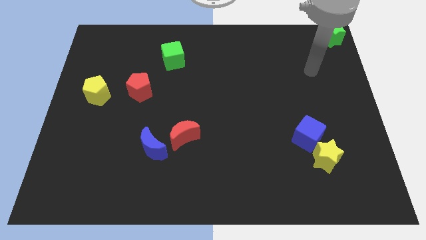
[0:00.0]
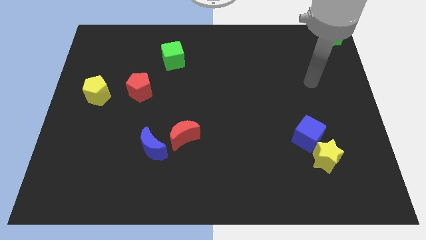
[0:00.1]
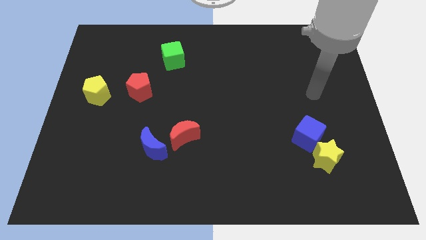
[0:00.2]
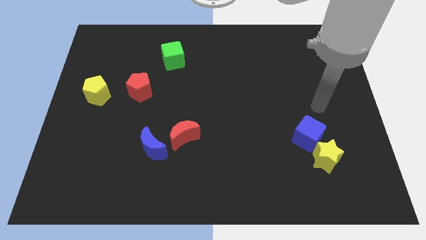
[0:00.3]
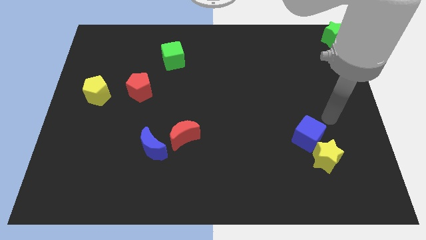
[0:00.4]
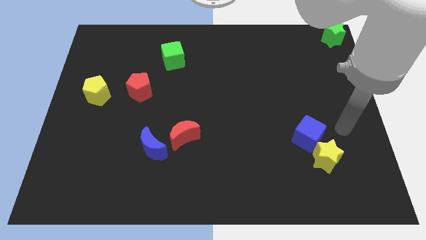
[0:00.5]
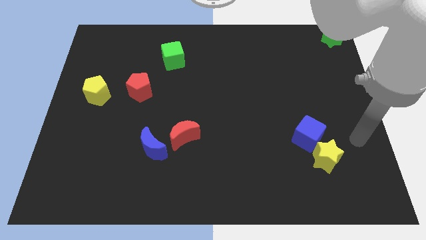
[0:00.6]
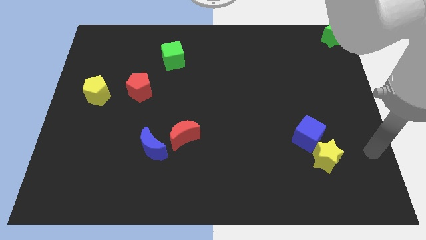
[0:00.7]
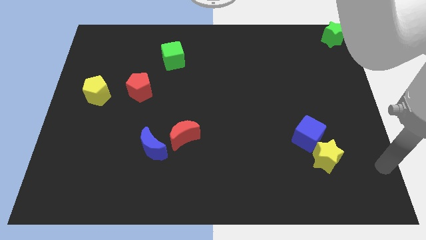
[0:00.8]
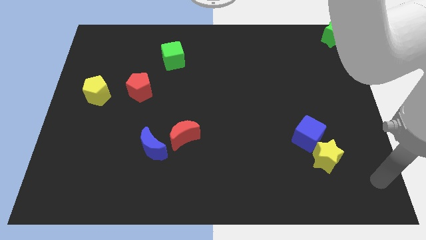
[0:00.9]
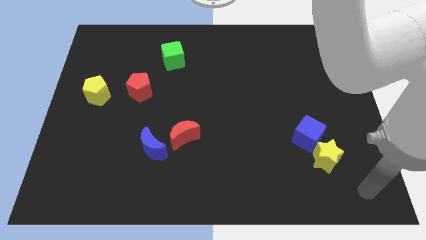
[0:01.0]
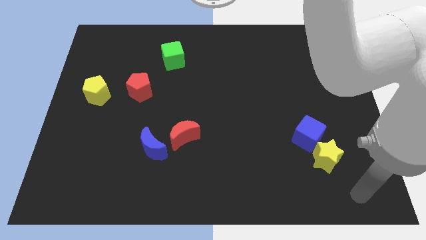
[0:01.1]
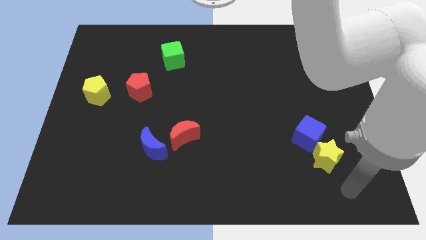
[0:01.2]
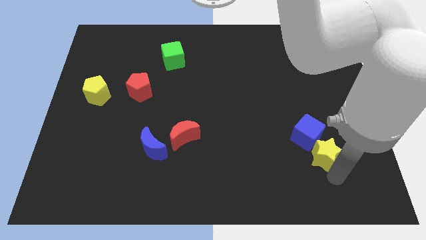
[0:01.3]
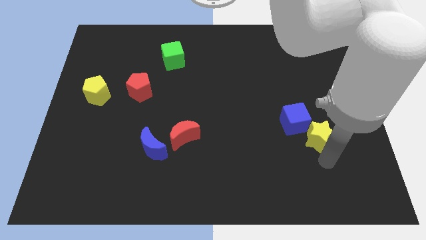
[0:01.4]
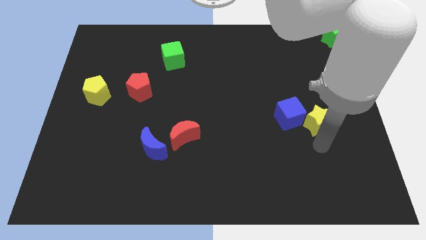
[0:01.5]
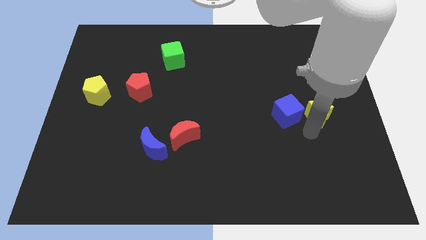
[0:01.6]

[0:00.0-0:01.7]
push the yellow star and blue cube up slightly

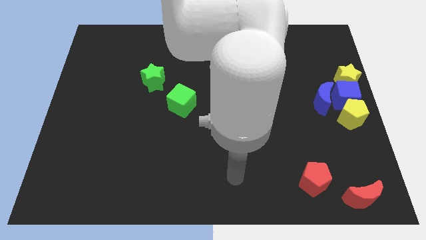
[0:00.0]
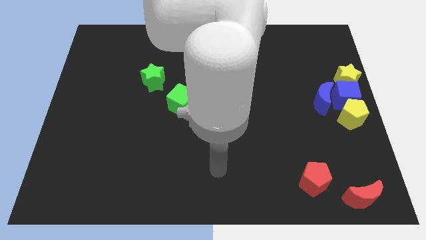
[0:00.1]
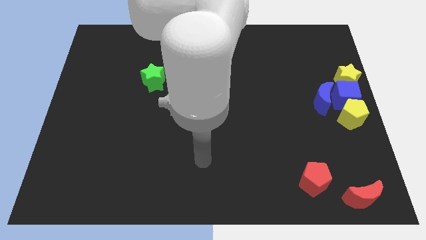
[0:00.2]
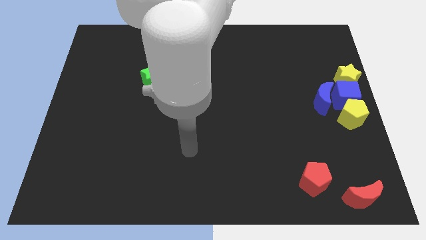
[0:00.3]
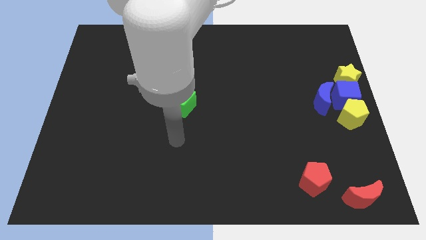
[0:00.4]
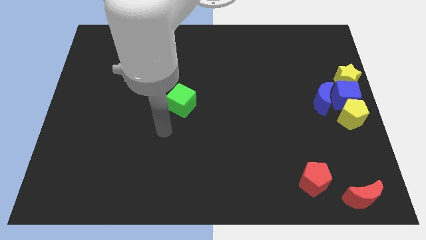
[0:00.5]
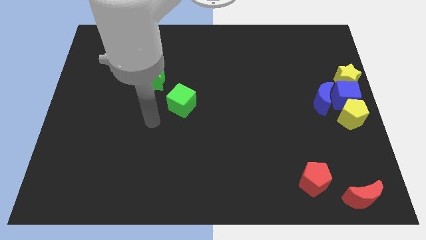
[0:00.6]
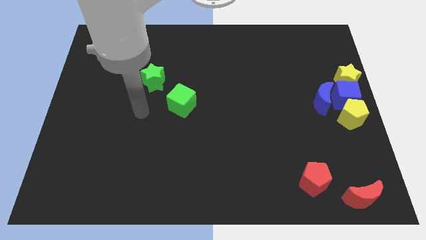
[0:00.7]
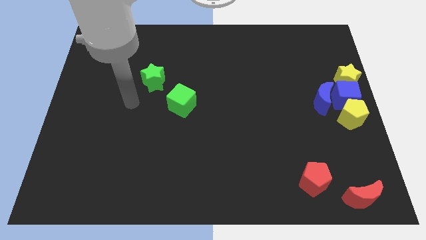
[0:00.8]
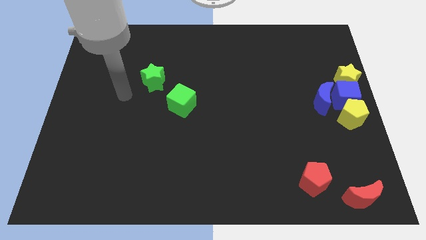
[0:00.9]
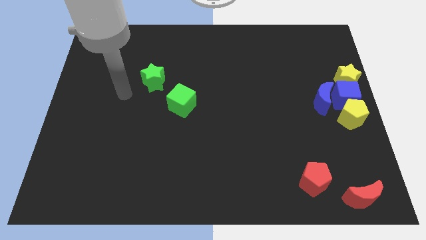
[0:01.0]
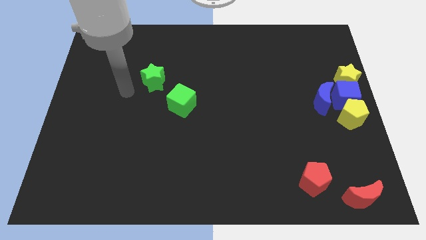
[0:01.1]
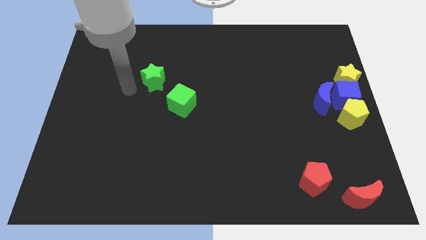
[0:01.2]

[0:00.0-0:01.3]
move your arm to the top of the board

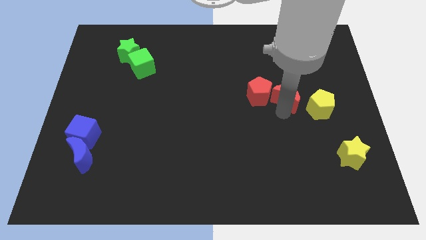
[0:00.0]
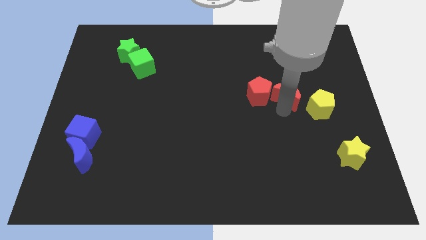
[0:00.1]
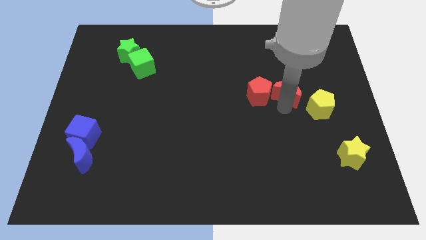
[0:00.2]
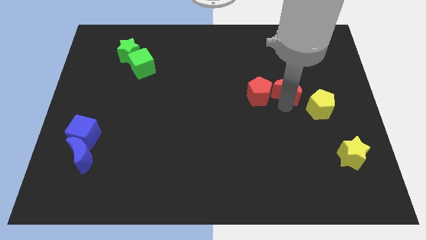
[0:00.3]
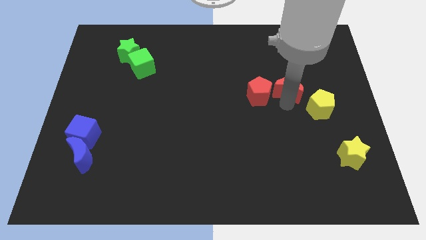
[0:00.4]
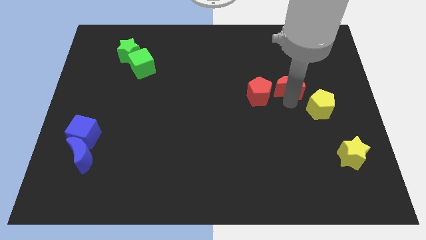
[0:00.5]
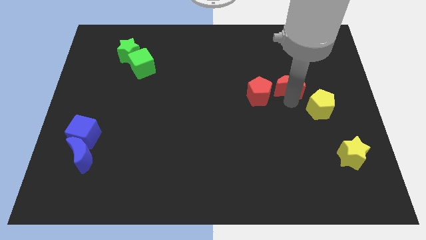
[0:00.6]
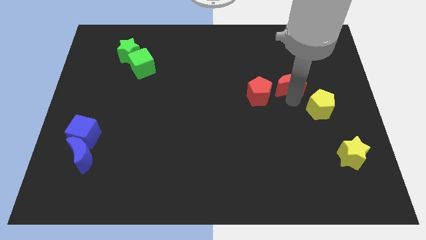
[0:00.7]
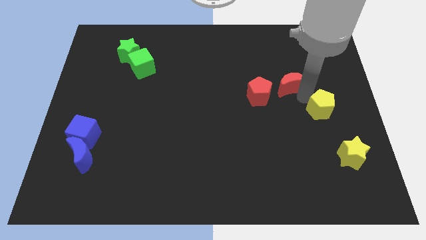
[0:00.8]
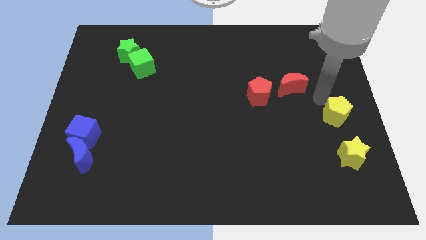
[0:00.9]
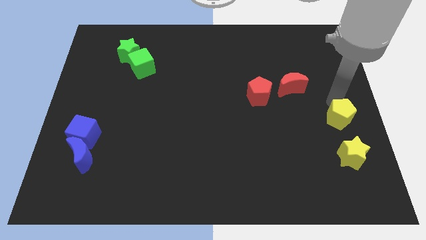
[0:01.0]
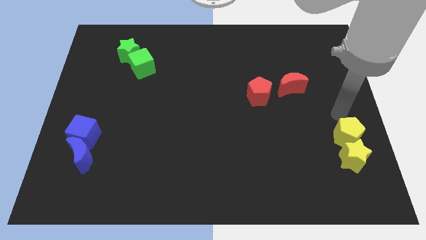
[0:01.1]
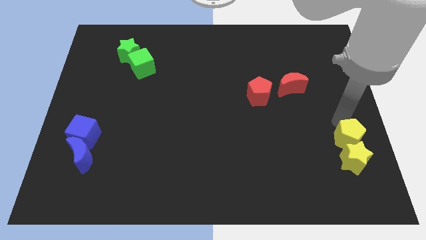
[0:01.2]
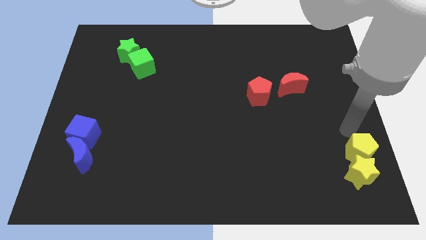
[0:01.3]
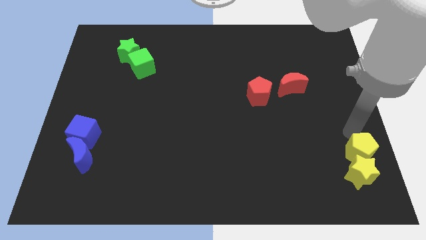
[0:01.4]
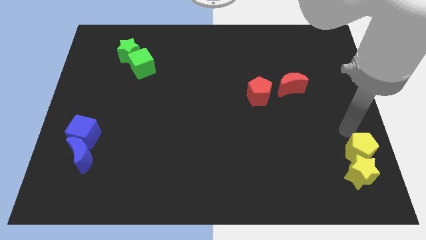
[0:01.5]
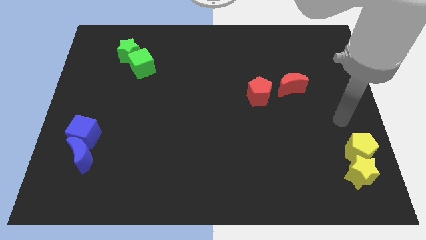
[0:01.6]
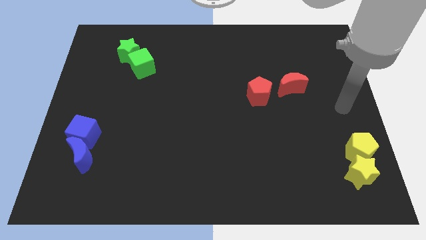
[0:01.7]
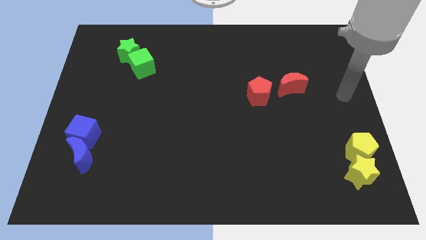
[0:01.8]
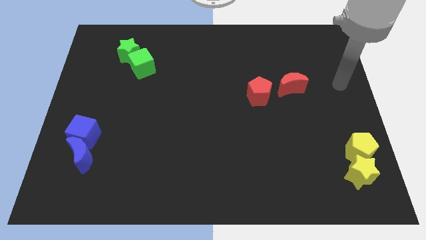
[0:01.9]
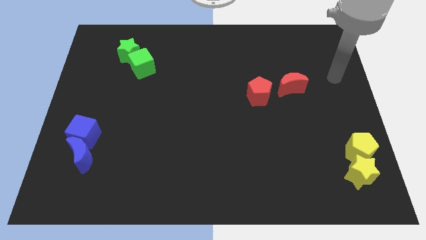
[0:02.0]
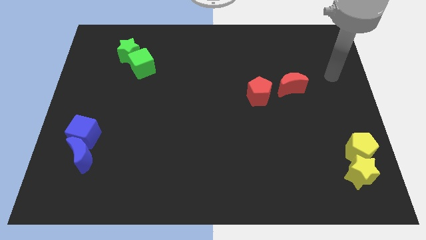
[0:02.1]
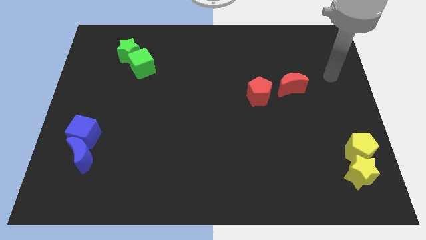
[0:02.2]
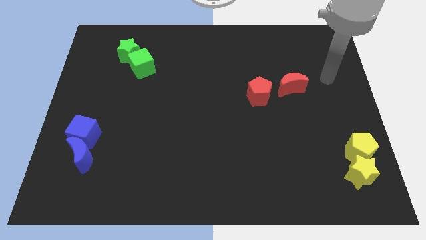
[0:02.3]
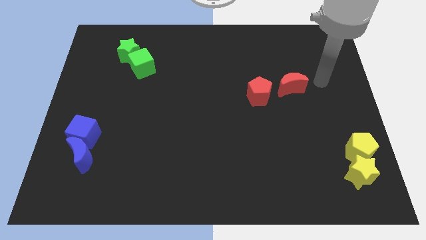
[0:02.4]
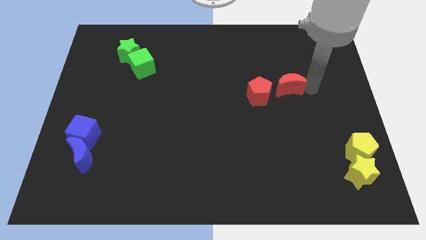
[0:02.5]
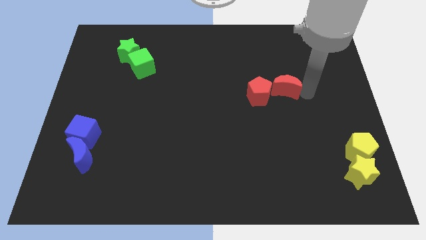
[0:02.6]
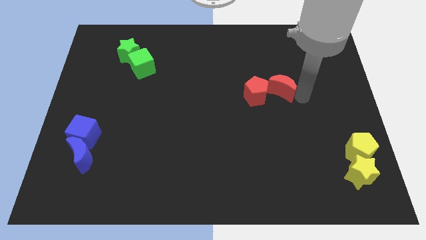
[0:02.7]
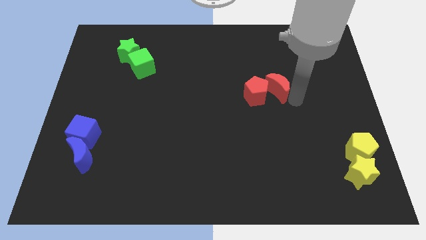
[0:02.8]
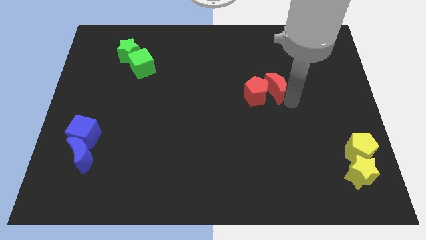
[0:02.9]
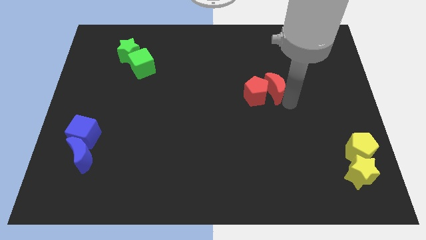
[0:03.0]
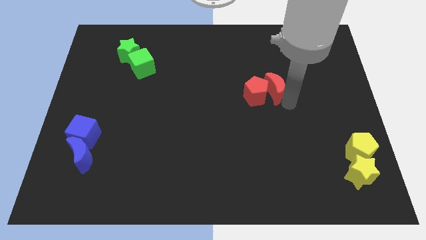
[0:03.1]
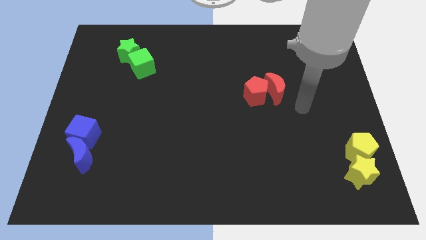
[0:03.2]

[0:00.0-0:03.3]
group up the yellow blocks and red blocks separately

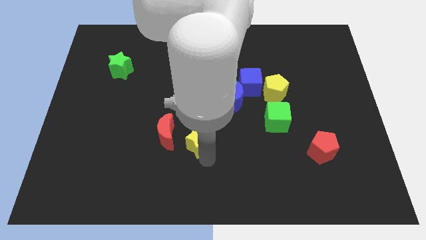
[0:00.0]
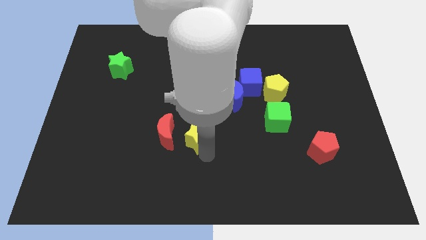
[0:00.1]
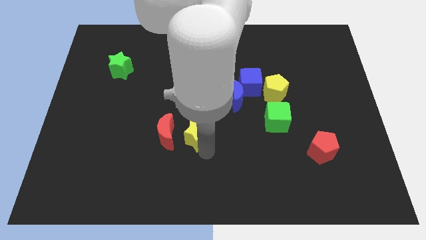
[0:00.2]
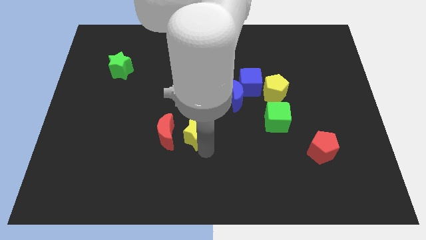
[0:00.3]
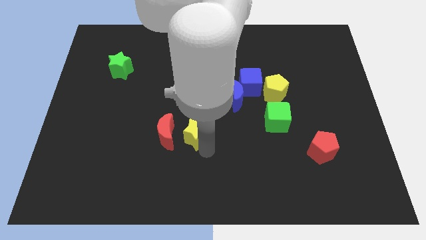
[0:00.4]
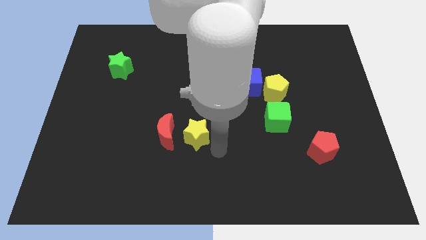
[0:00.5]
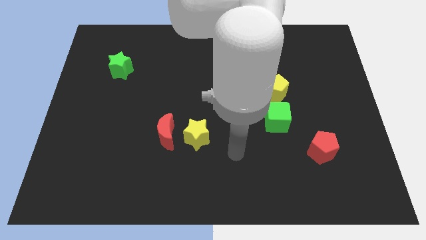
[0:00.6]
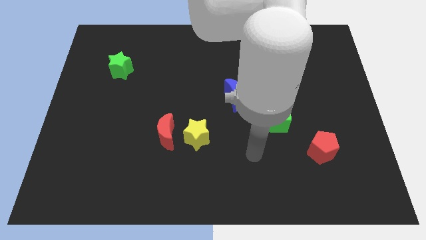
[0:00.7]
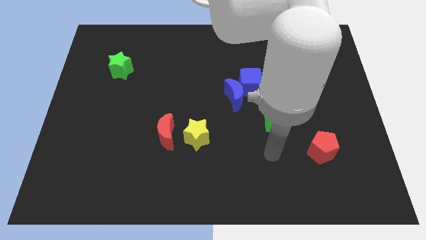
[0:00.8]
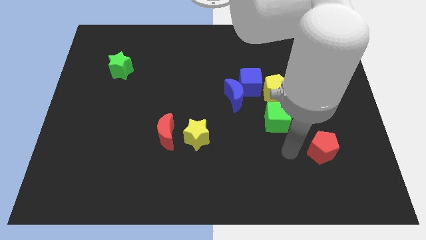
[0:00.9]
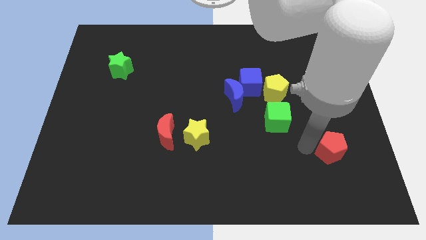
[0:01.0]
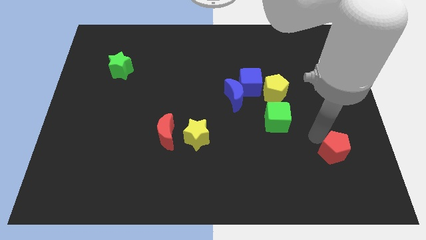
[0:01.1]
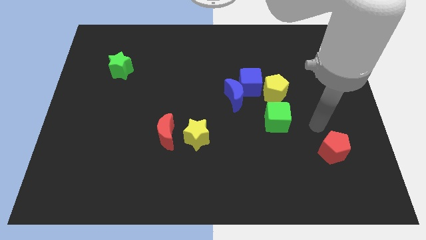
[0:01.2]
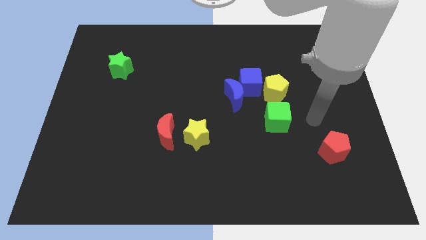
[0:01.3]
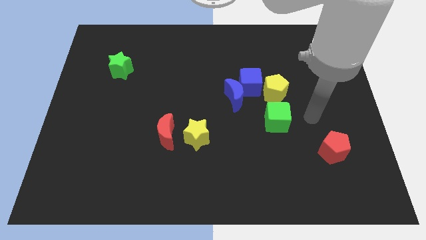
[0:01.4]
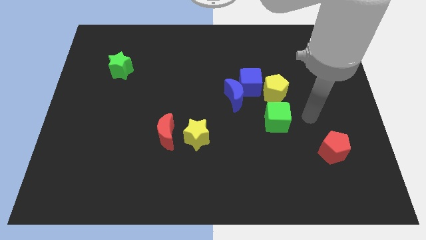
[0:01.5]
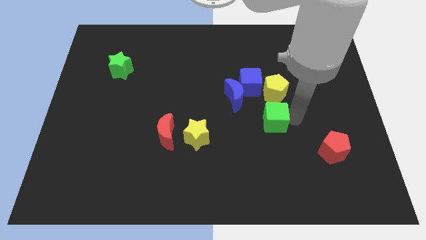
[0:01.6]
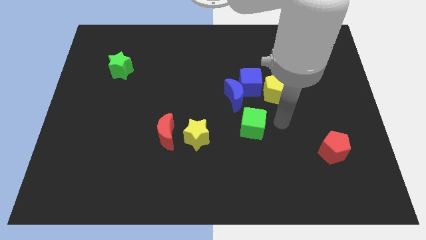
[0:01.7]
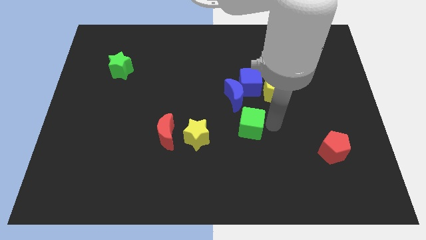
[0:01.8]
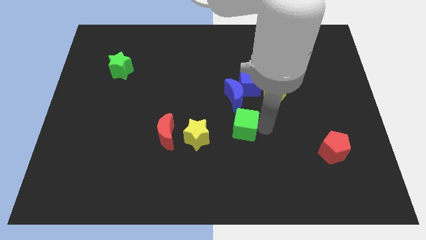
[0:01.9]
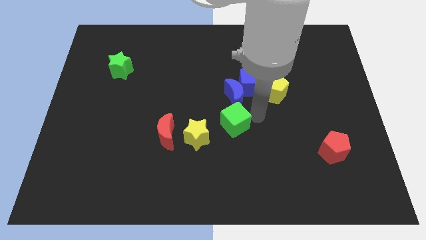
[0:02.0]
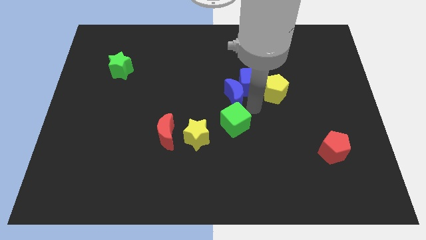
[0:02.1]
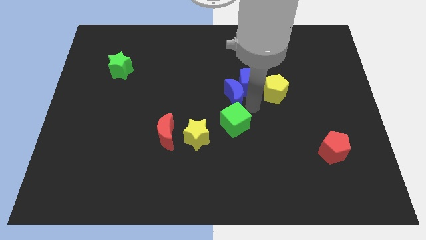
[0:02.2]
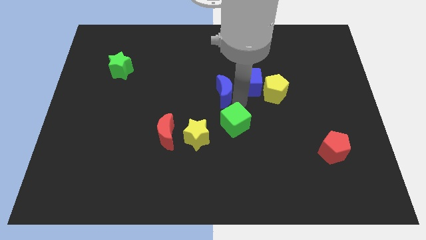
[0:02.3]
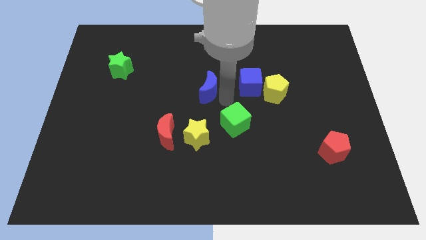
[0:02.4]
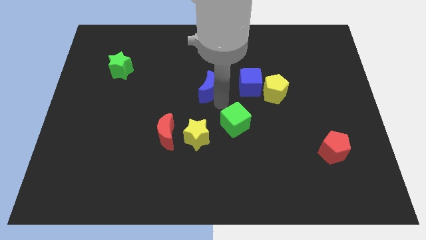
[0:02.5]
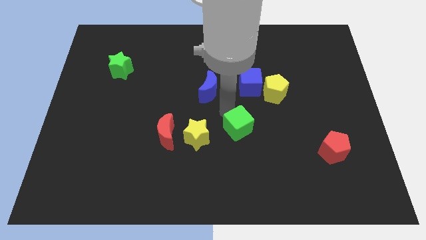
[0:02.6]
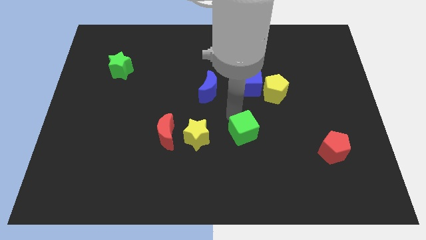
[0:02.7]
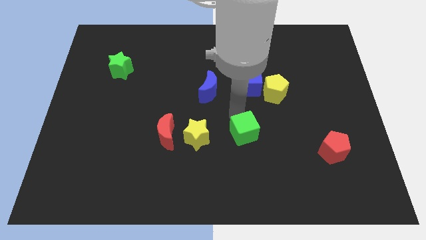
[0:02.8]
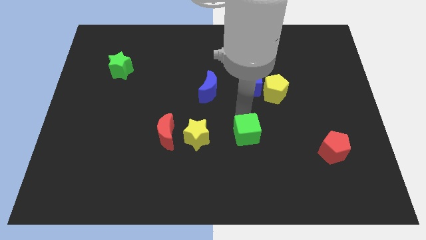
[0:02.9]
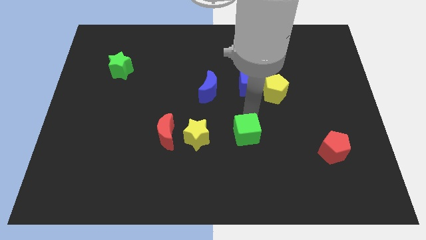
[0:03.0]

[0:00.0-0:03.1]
move the green cube towards the center
